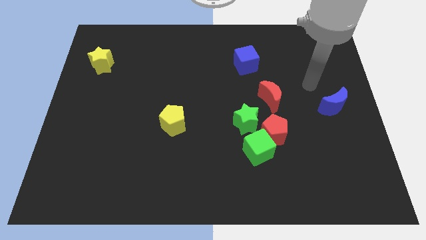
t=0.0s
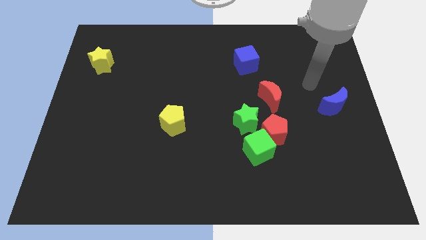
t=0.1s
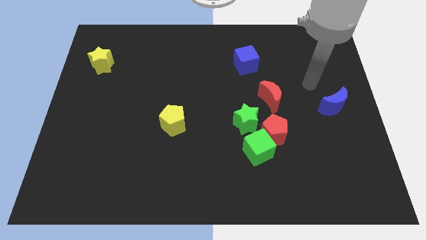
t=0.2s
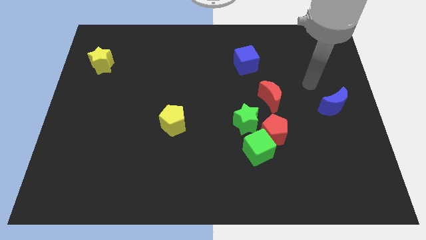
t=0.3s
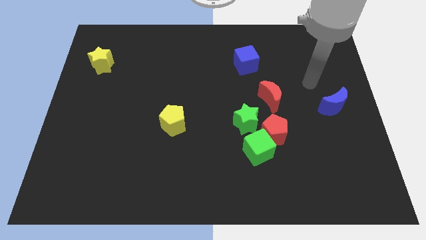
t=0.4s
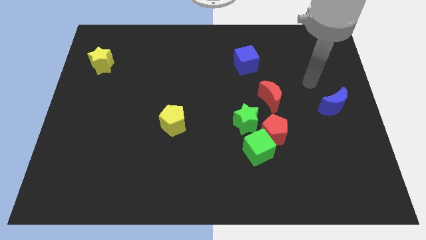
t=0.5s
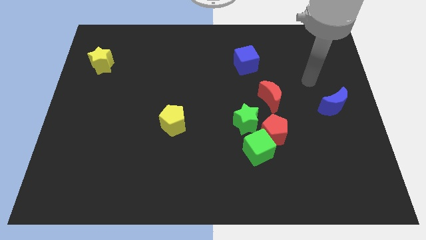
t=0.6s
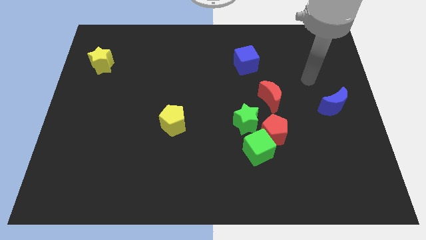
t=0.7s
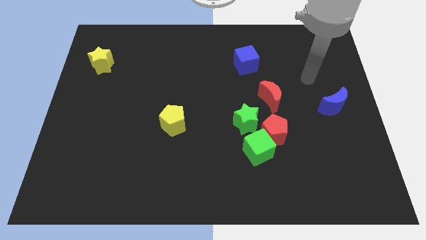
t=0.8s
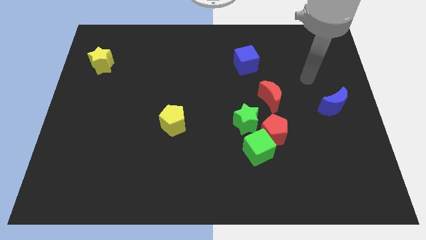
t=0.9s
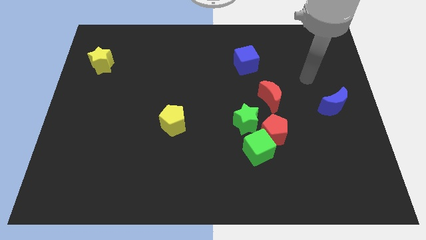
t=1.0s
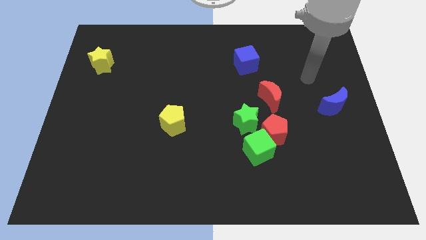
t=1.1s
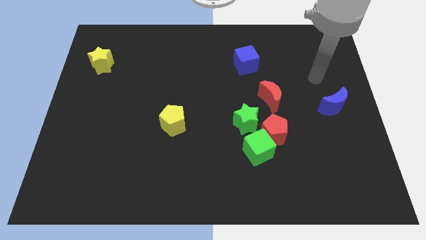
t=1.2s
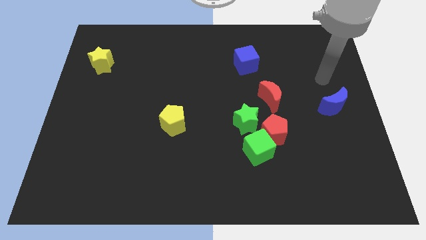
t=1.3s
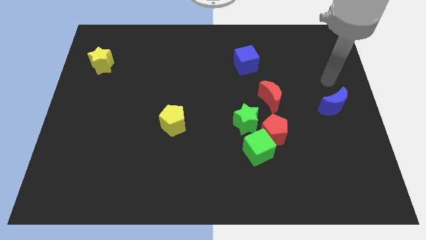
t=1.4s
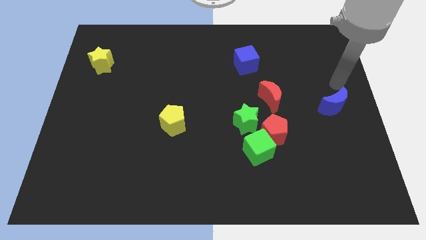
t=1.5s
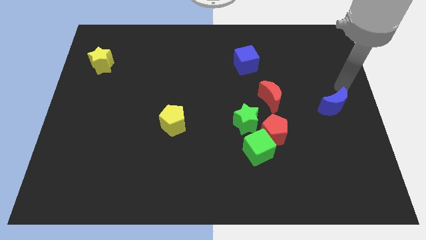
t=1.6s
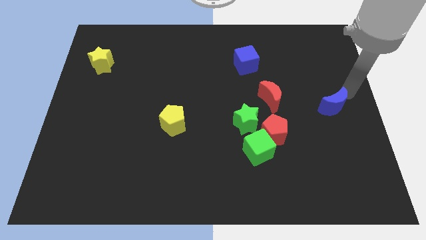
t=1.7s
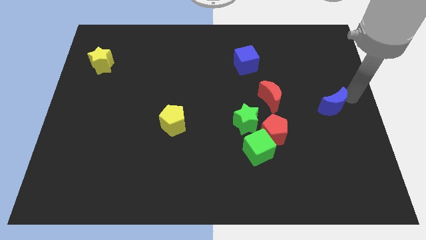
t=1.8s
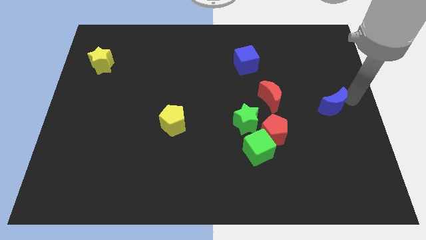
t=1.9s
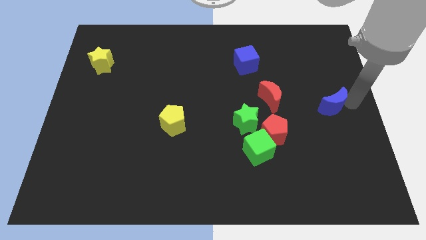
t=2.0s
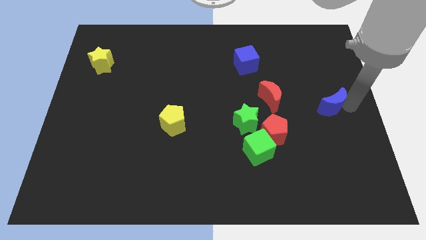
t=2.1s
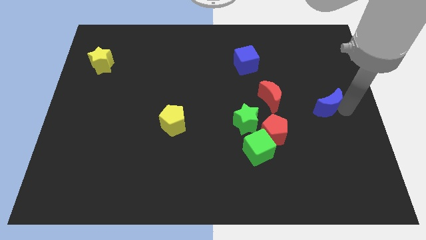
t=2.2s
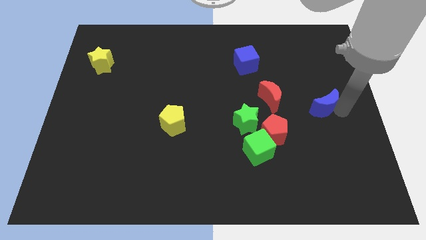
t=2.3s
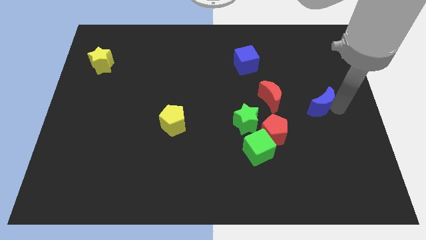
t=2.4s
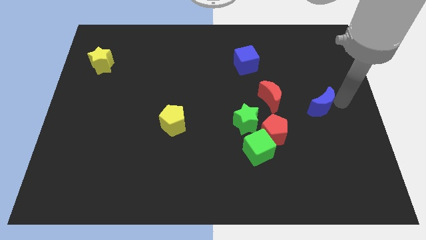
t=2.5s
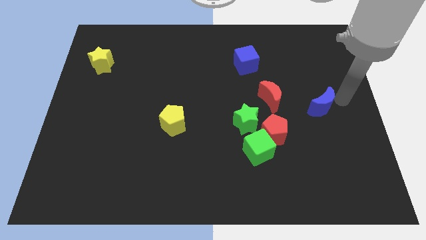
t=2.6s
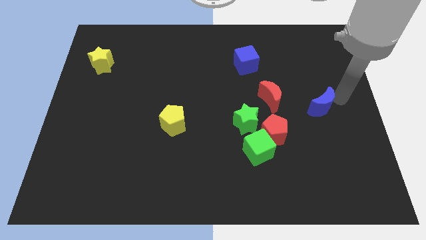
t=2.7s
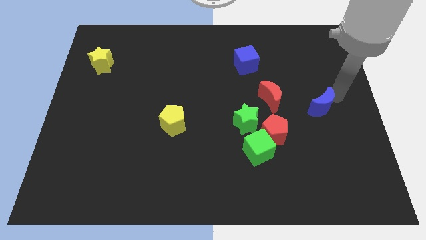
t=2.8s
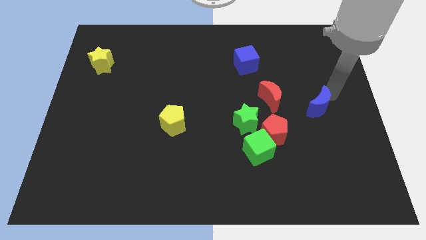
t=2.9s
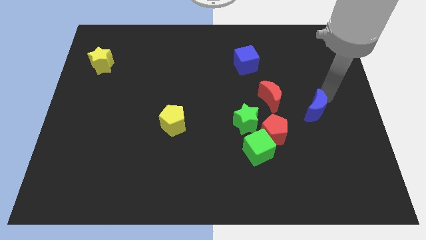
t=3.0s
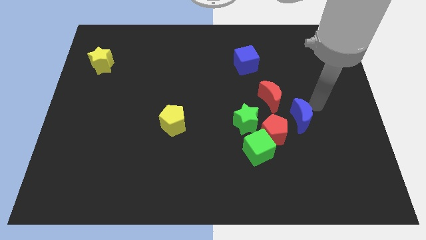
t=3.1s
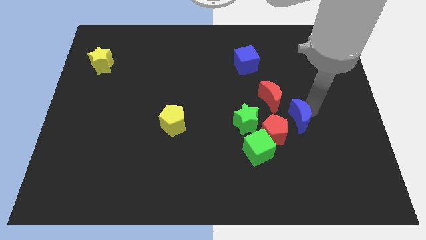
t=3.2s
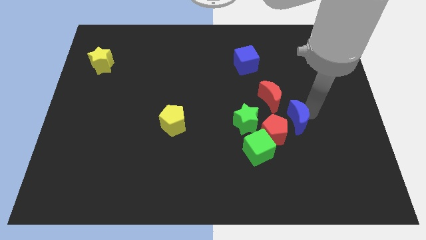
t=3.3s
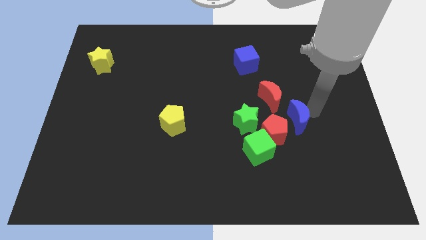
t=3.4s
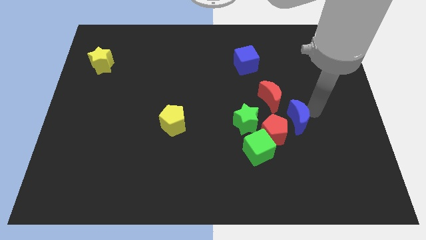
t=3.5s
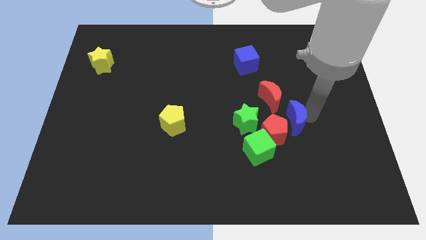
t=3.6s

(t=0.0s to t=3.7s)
push the blue crescent towards the right side of the red pentagon

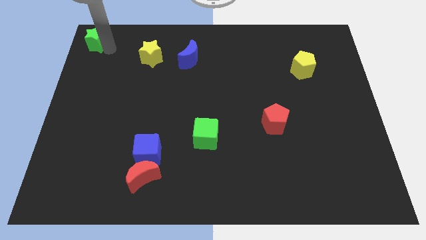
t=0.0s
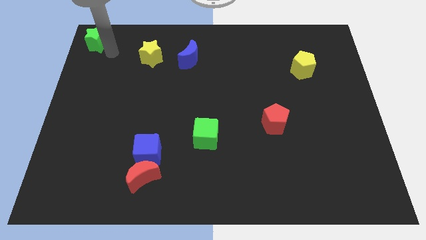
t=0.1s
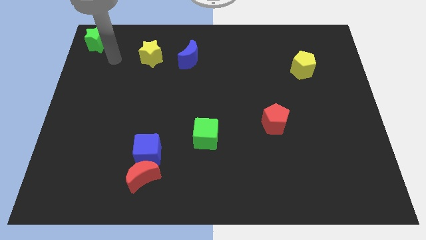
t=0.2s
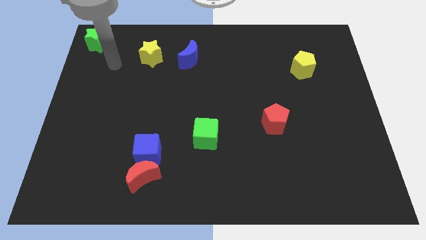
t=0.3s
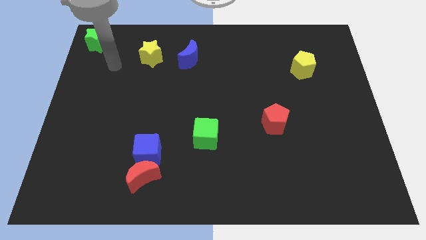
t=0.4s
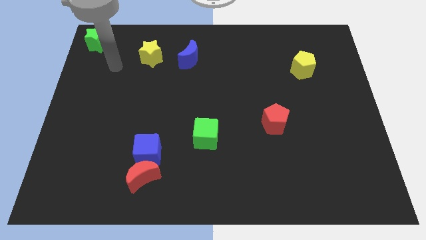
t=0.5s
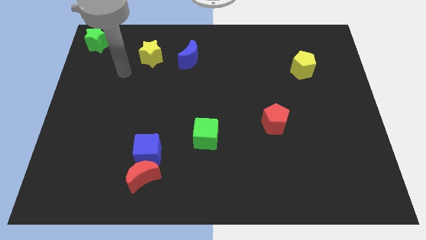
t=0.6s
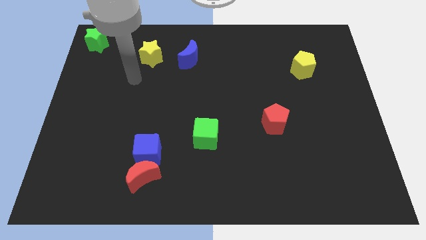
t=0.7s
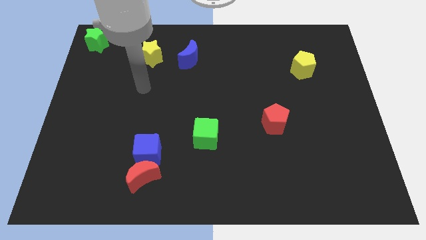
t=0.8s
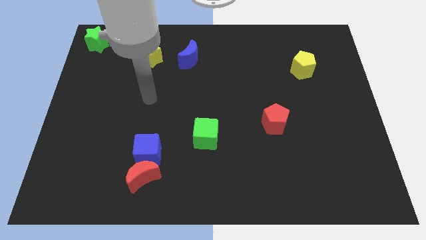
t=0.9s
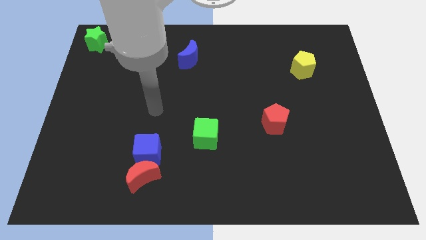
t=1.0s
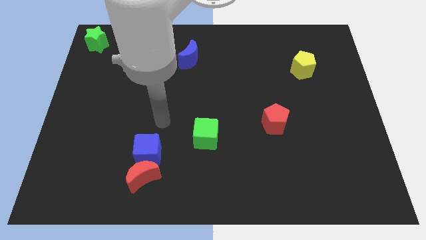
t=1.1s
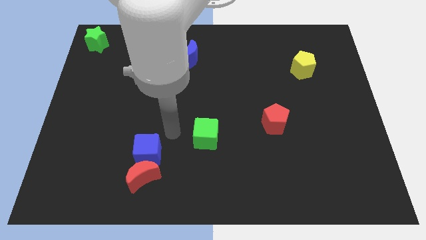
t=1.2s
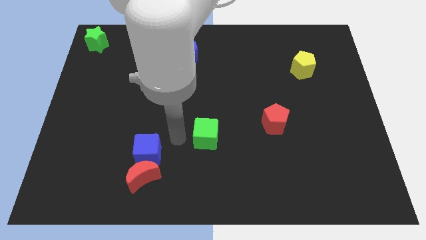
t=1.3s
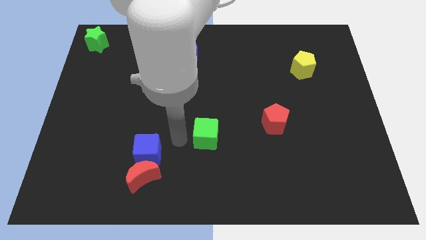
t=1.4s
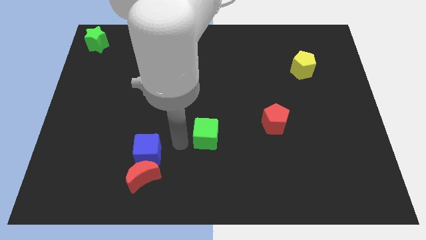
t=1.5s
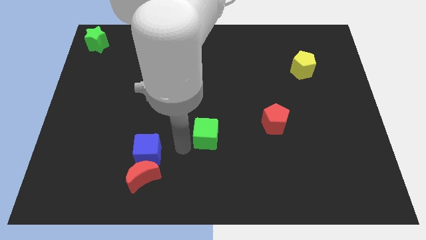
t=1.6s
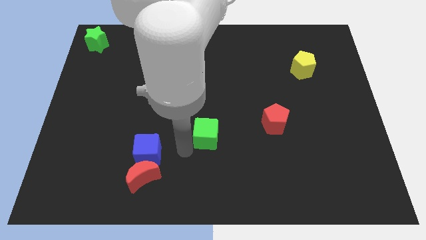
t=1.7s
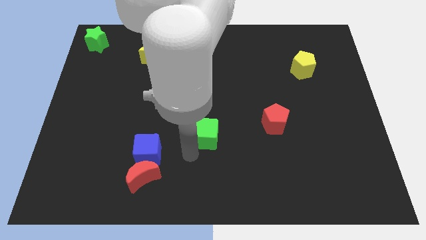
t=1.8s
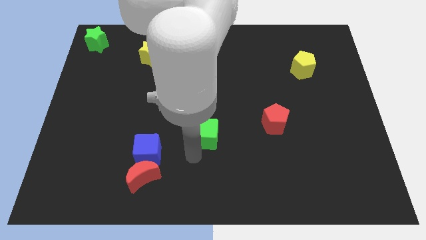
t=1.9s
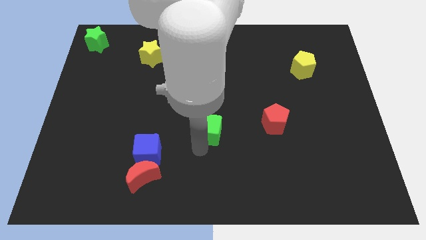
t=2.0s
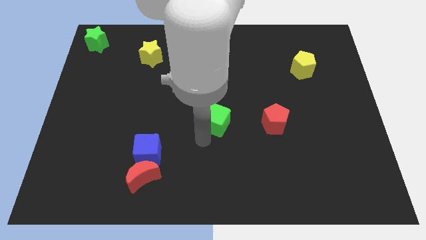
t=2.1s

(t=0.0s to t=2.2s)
touch the bottom of green cube

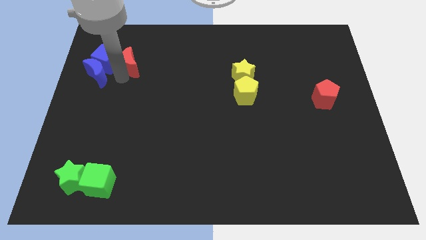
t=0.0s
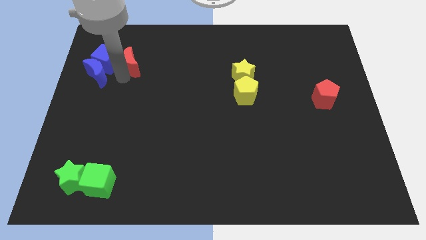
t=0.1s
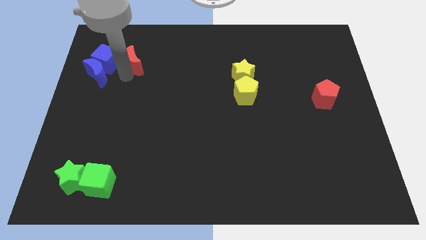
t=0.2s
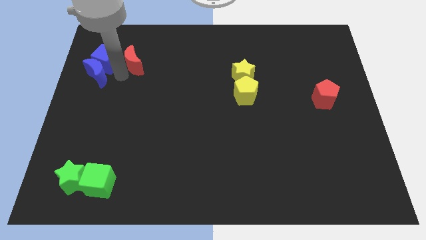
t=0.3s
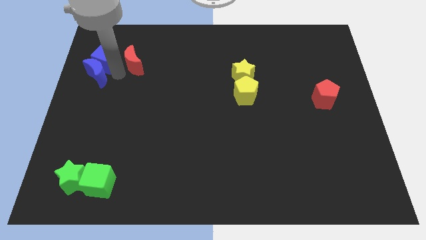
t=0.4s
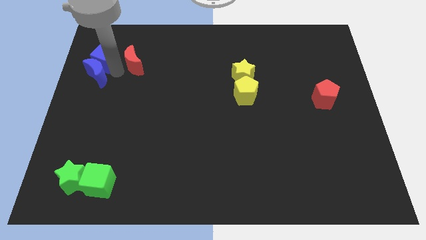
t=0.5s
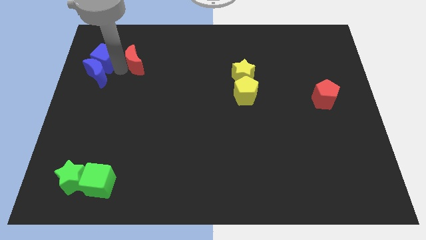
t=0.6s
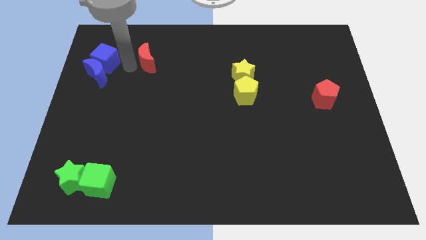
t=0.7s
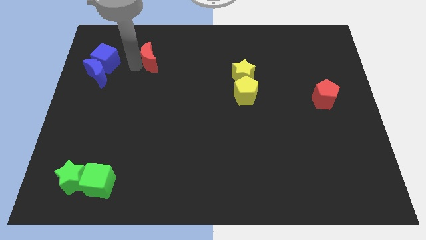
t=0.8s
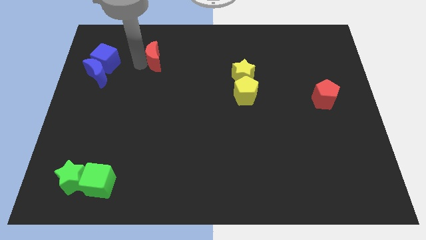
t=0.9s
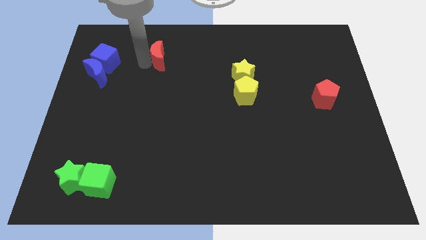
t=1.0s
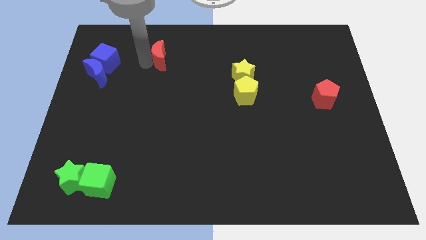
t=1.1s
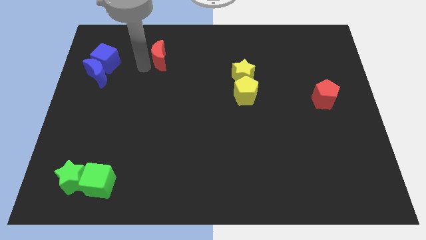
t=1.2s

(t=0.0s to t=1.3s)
separate the red moon from blue blocks

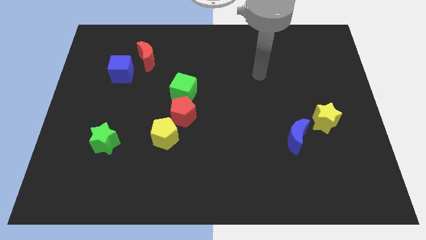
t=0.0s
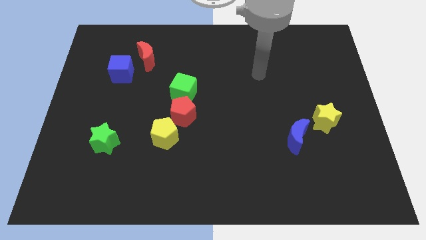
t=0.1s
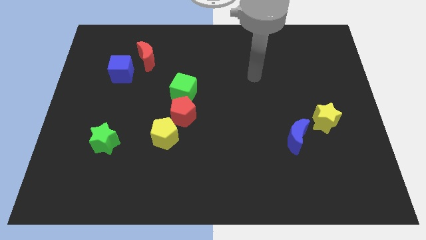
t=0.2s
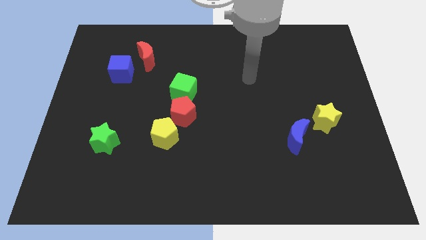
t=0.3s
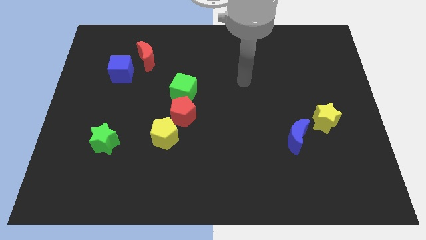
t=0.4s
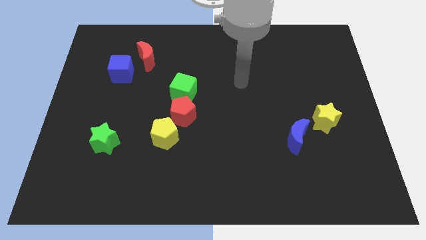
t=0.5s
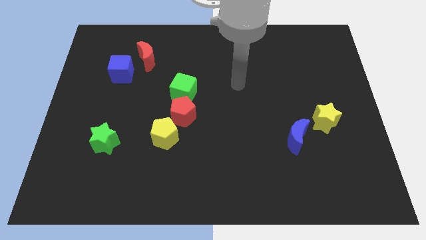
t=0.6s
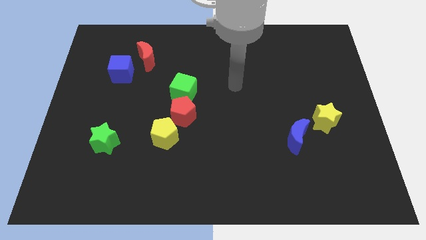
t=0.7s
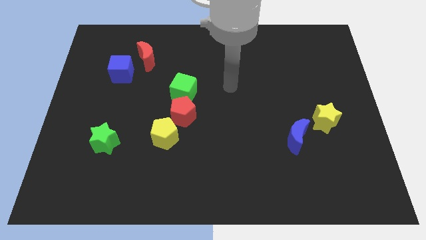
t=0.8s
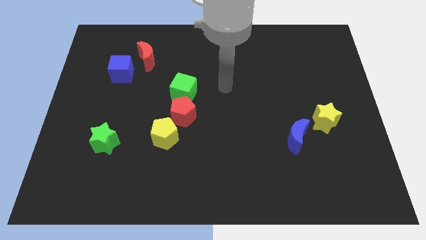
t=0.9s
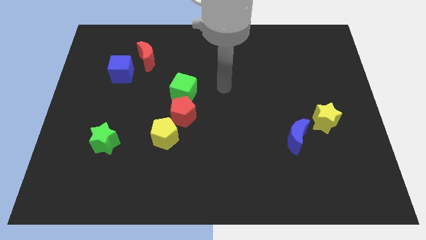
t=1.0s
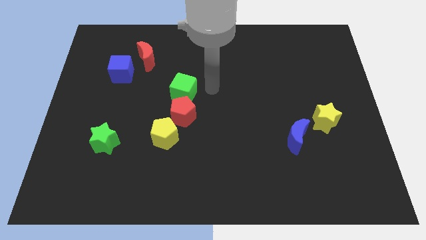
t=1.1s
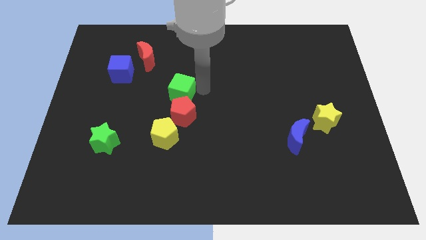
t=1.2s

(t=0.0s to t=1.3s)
move your arm towards the green cube

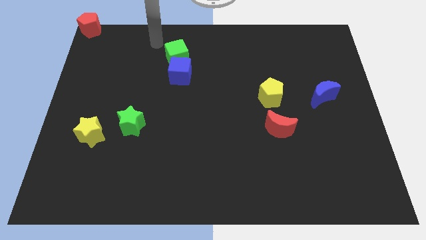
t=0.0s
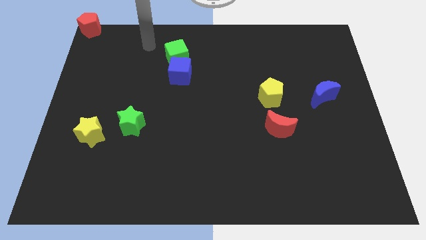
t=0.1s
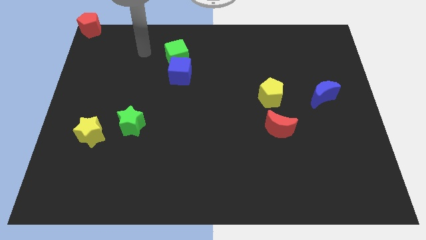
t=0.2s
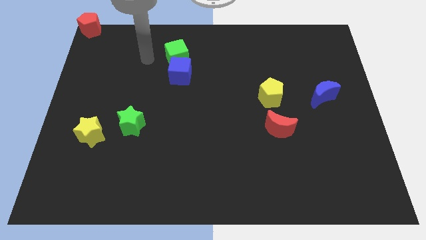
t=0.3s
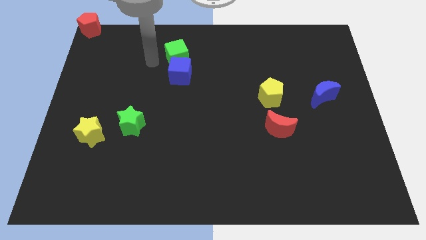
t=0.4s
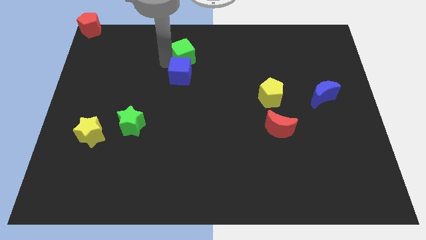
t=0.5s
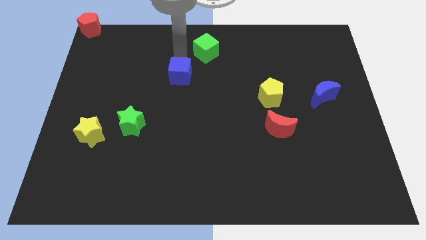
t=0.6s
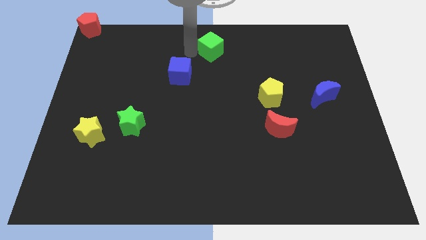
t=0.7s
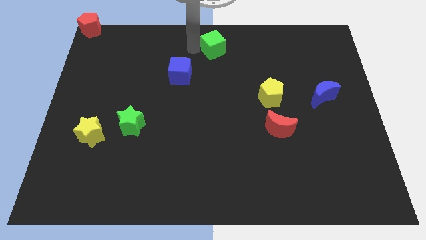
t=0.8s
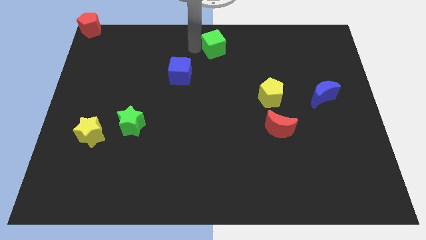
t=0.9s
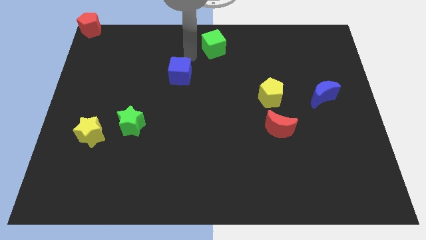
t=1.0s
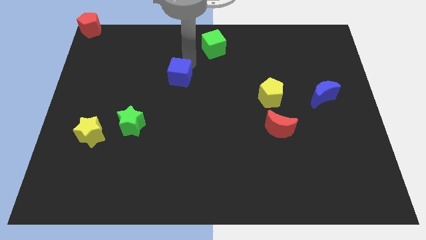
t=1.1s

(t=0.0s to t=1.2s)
separate green cube from blue cube
